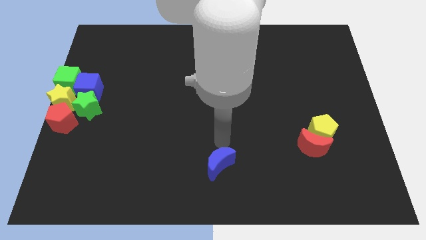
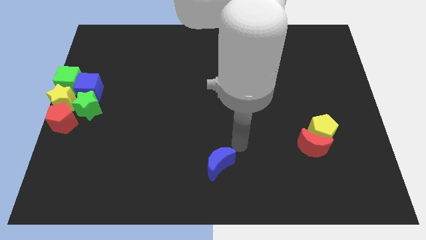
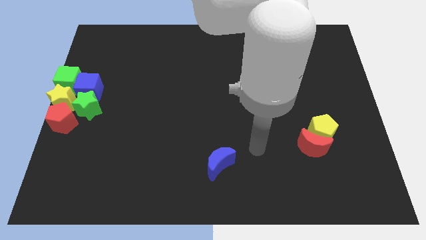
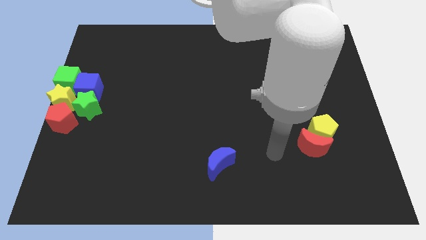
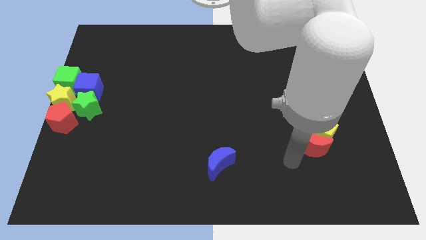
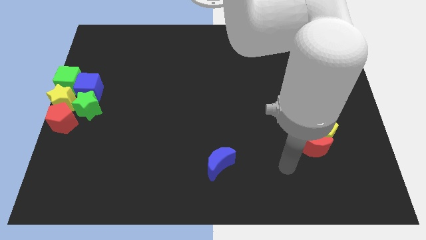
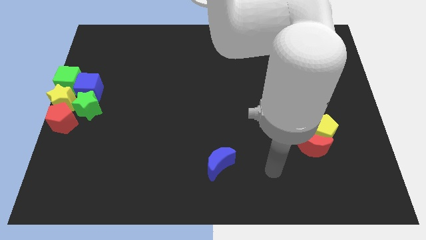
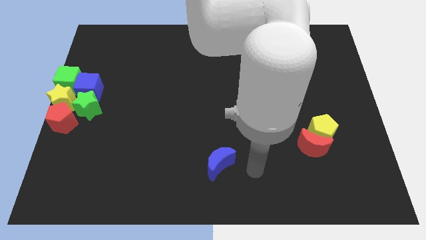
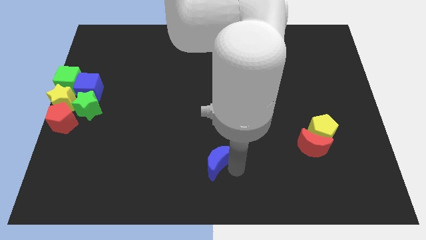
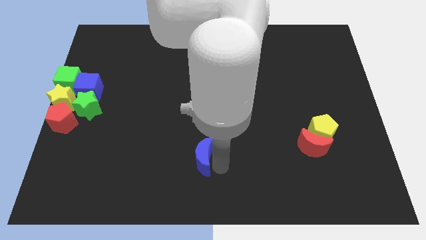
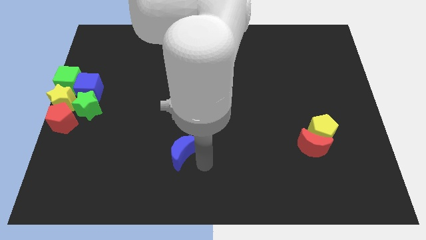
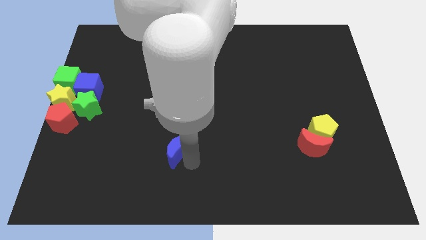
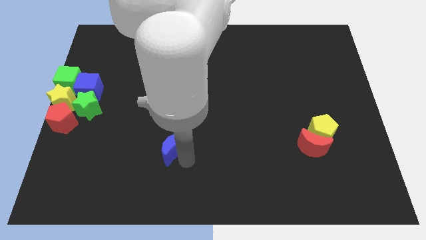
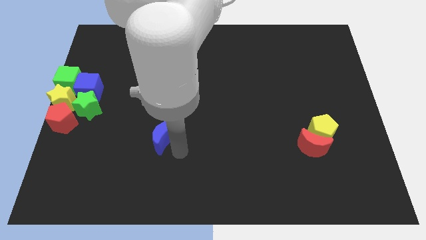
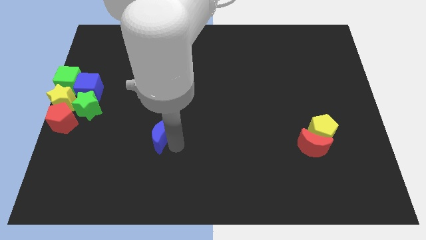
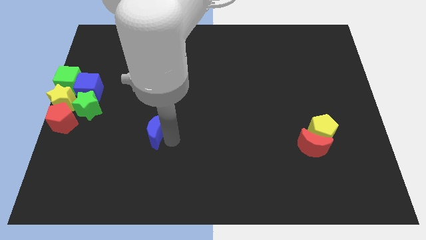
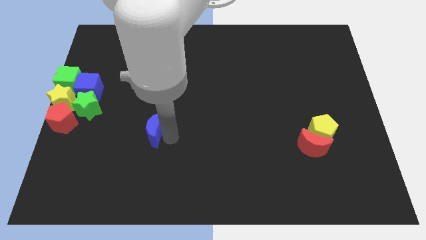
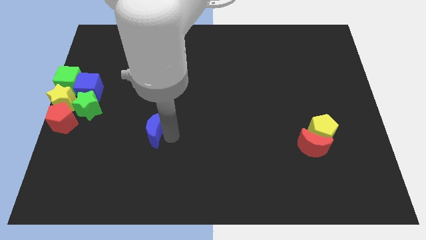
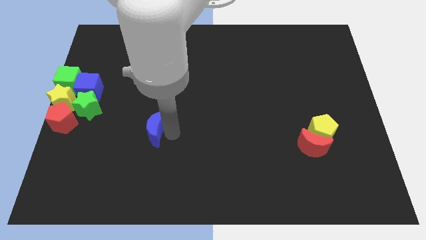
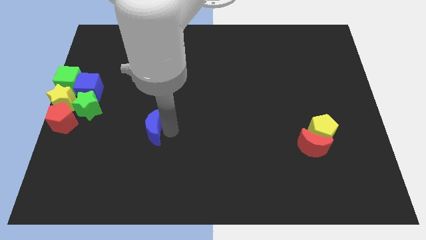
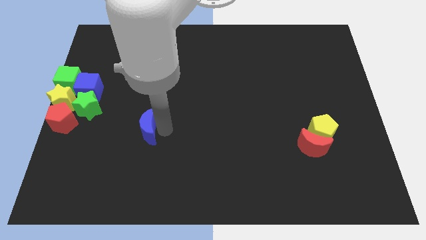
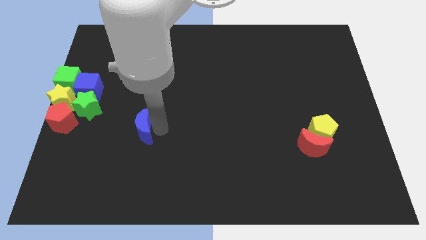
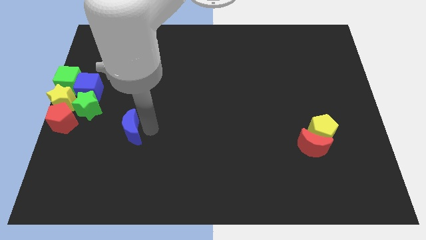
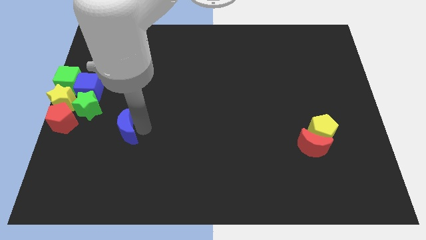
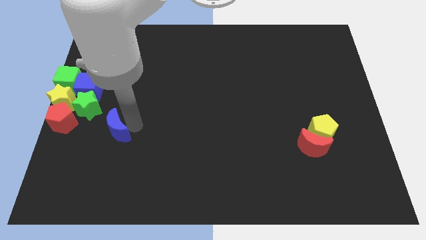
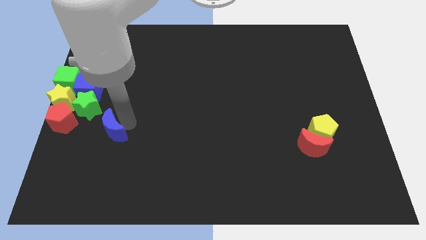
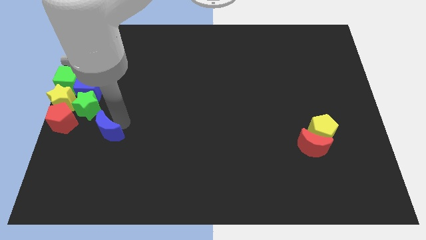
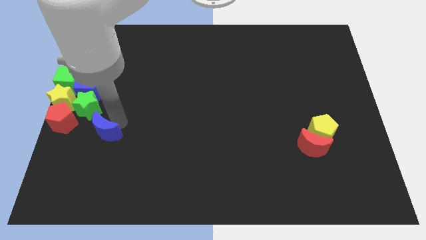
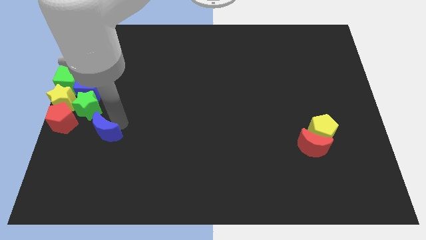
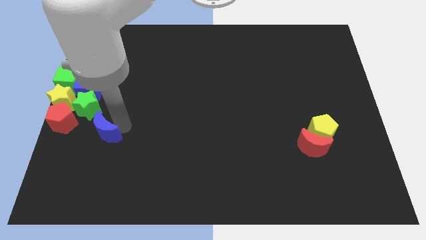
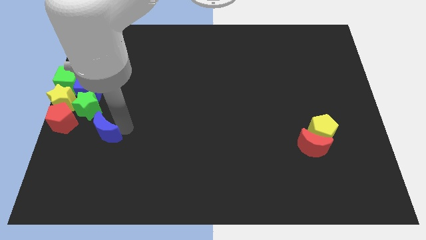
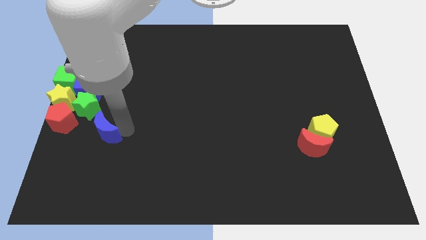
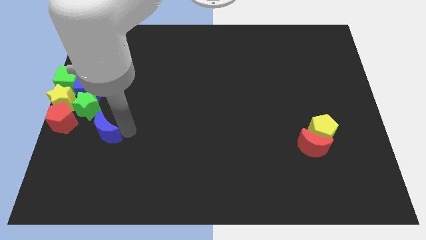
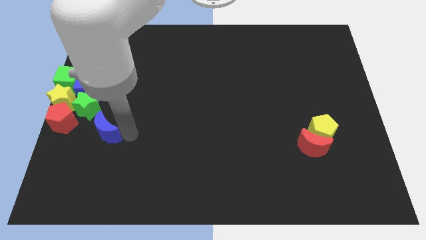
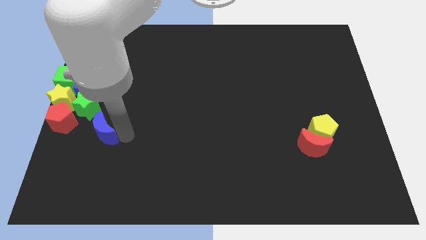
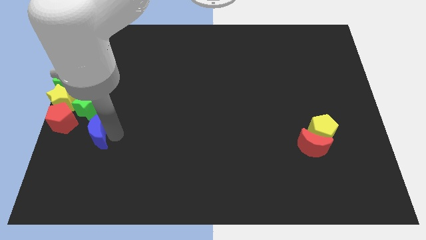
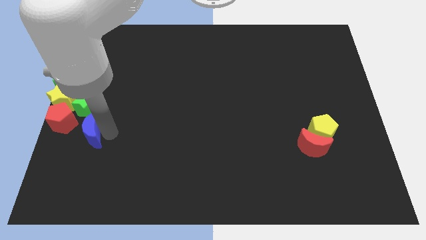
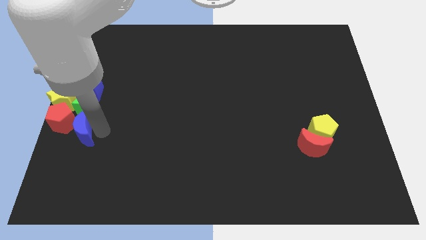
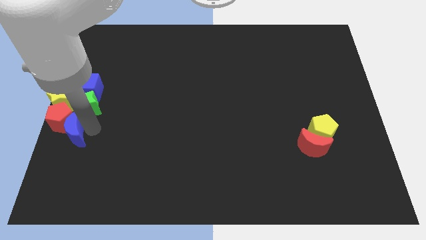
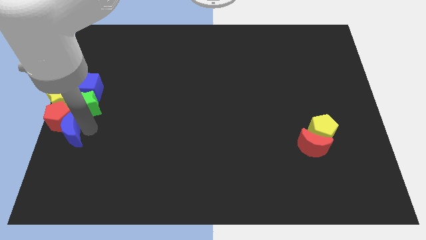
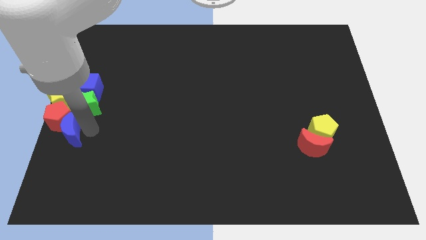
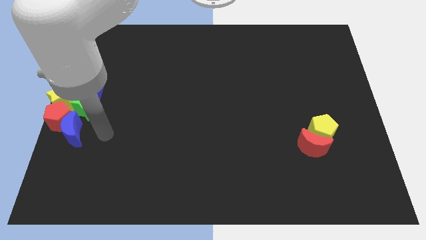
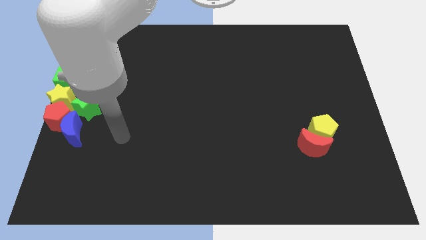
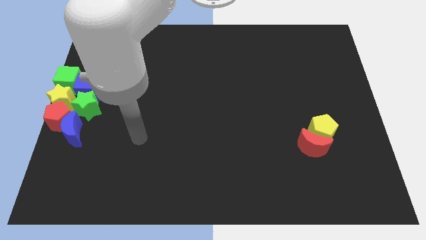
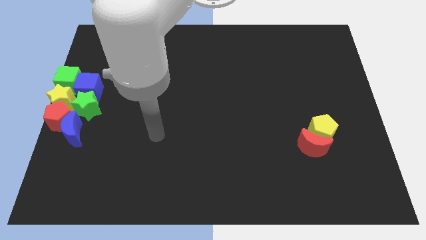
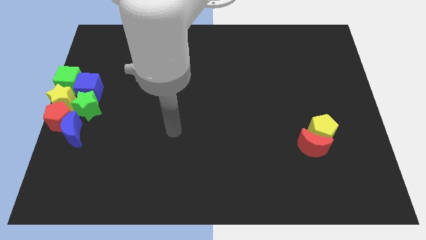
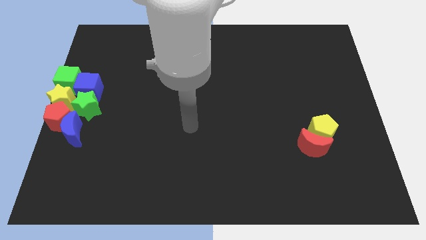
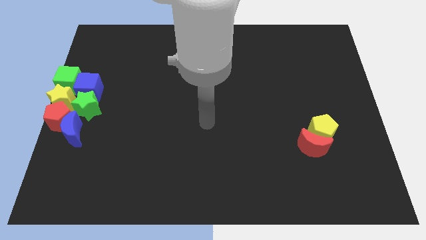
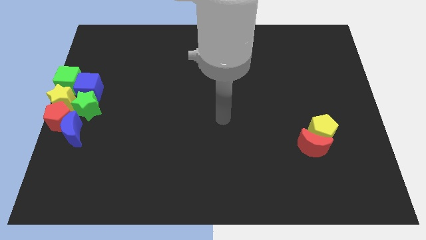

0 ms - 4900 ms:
place the blue crescent below the green star to form a vertical line

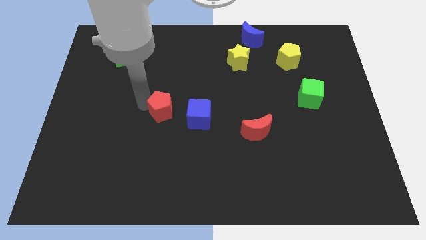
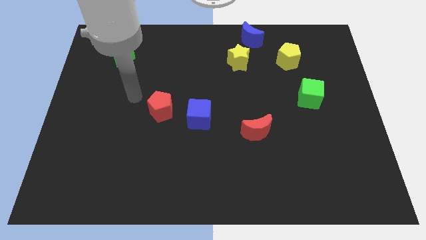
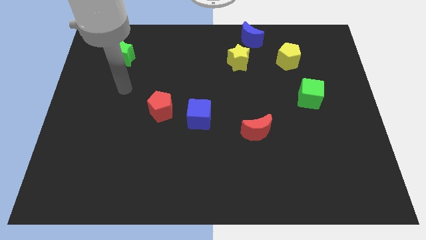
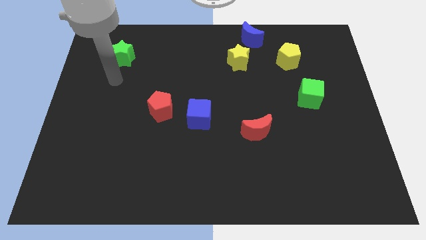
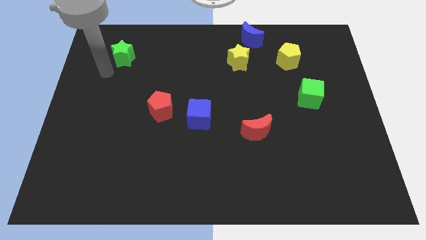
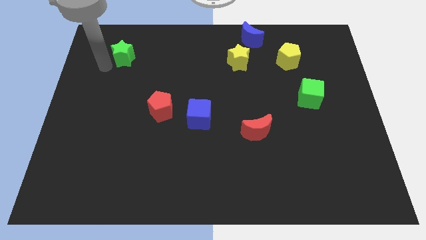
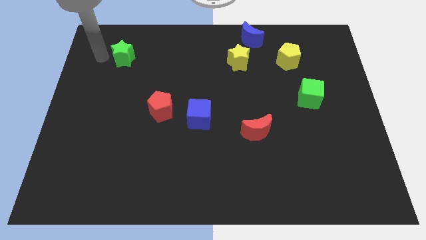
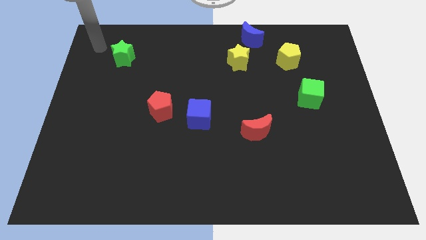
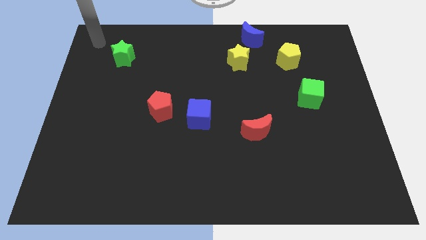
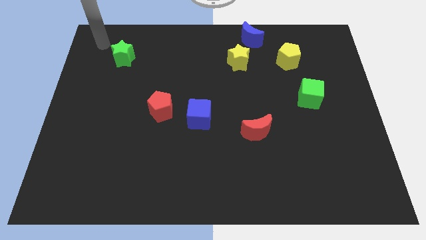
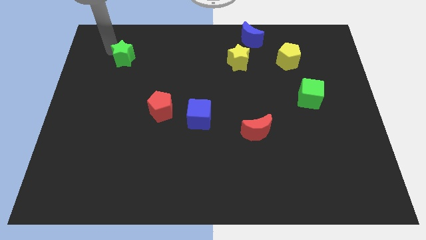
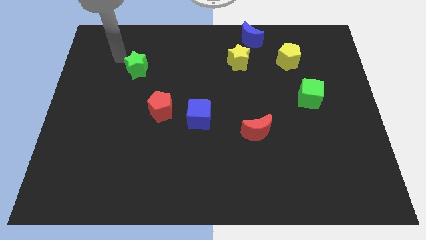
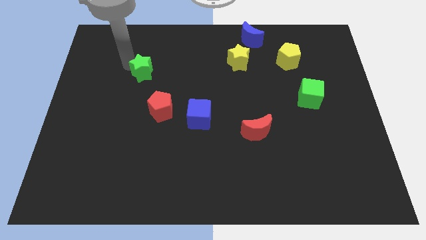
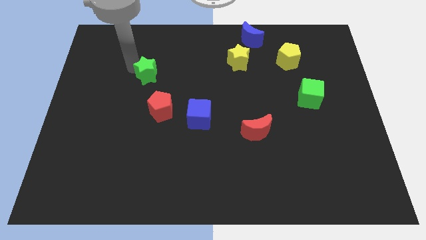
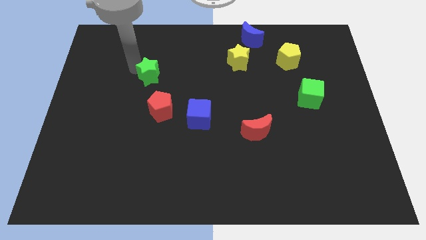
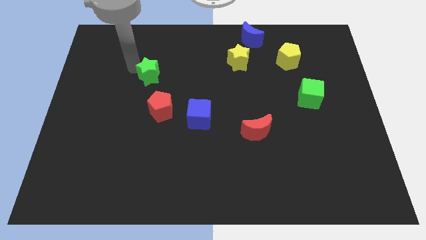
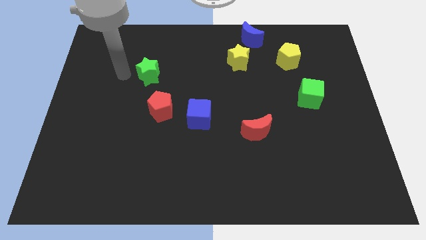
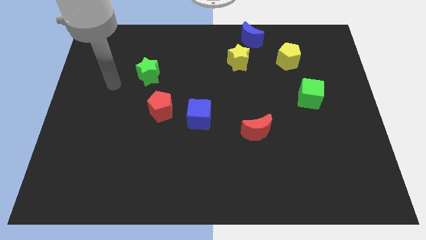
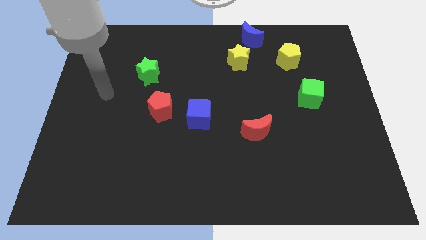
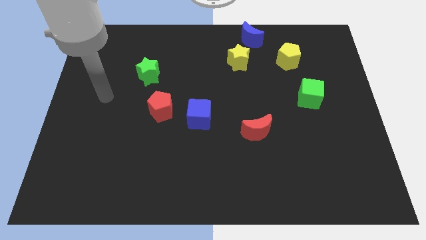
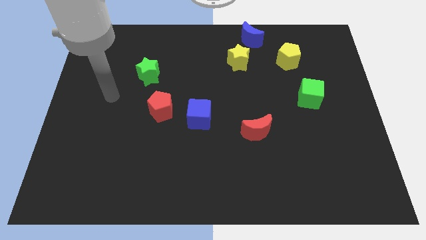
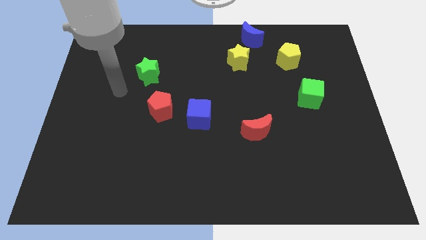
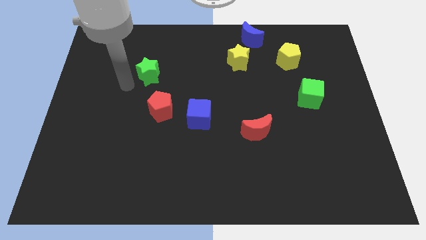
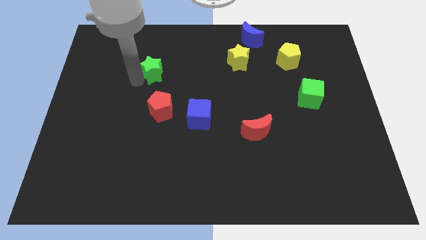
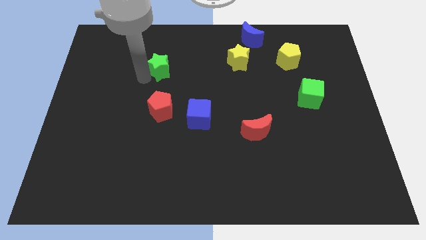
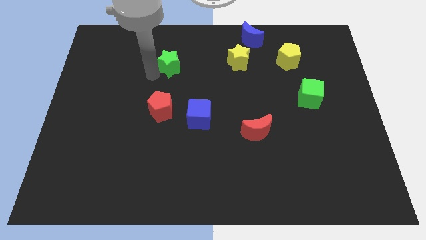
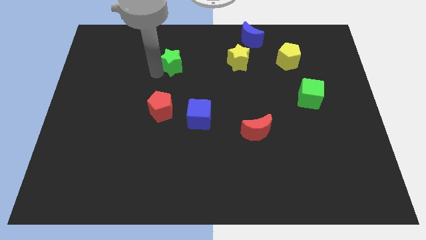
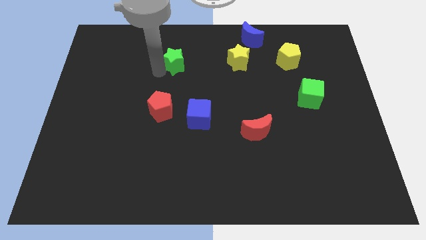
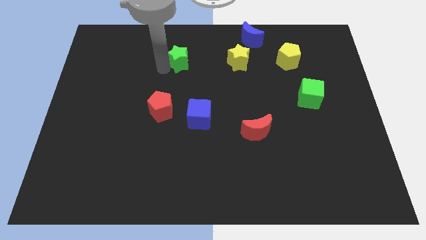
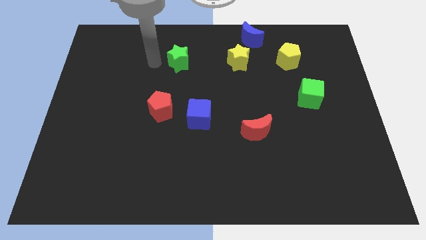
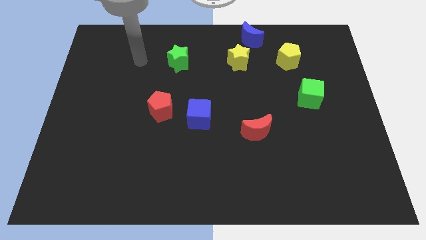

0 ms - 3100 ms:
push the green star horizontally at the left side of the yellow star

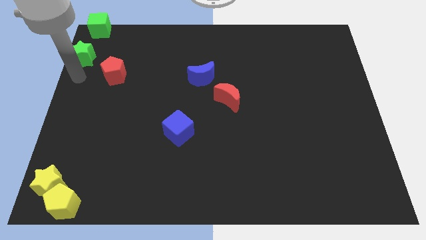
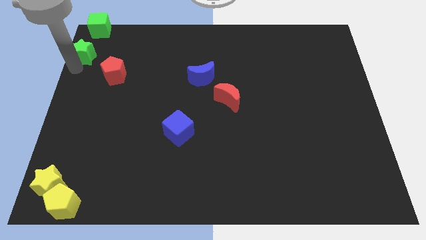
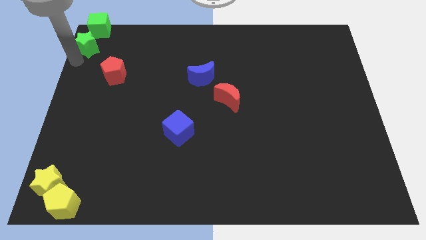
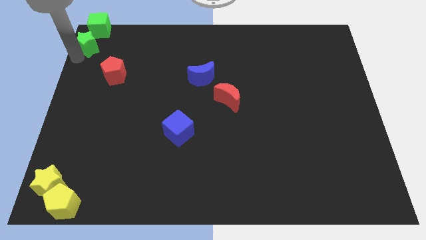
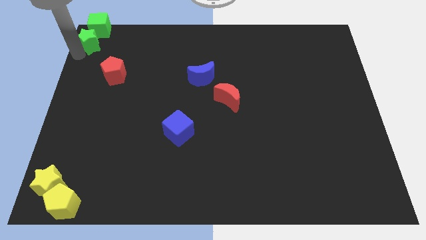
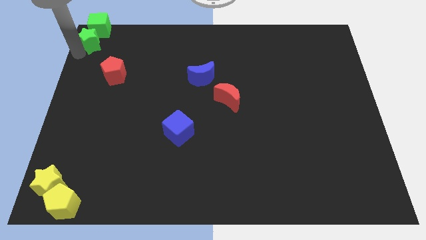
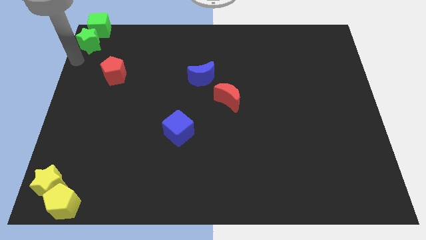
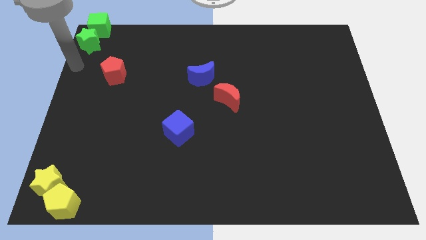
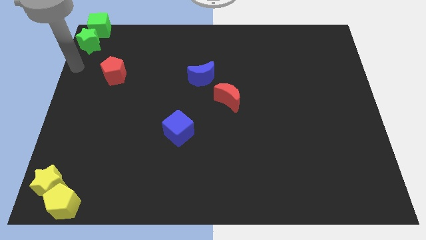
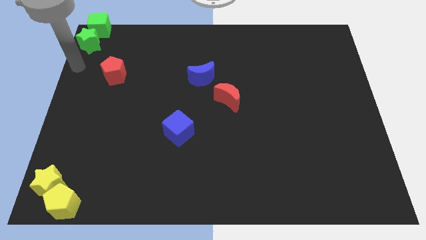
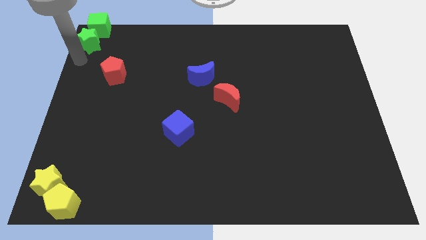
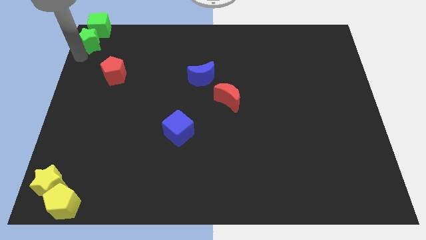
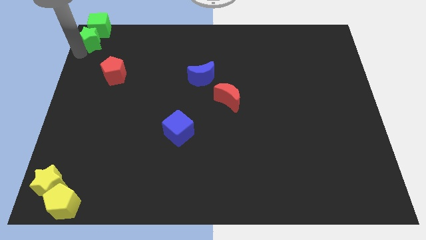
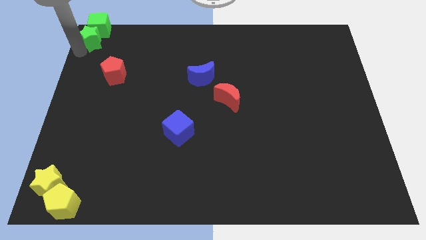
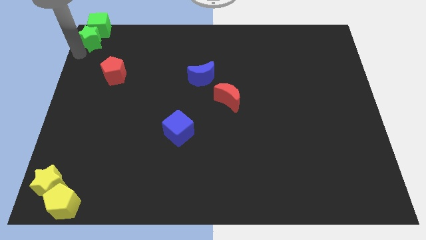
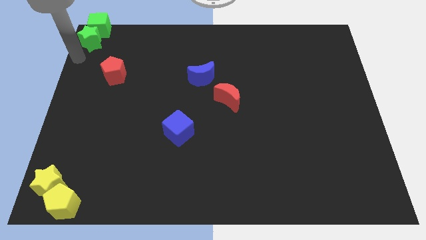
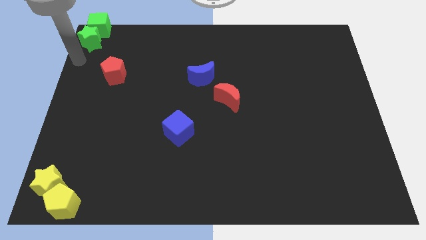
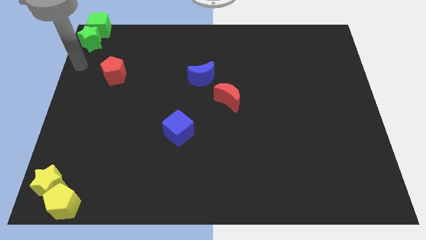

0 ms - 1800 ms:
drag the green star into the green cube
